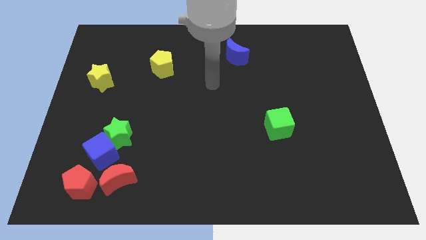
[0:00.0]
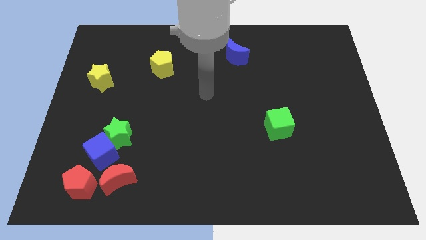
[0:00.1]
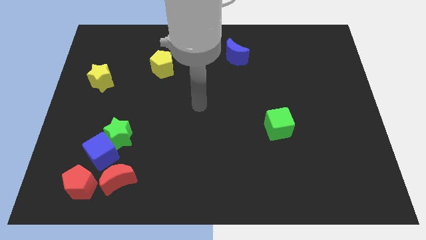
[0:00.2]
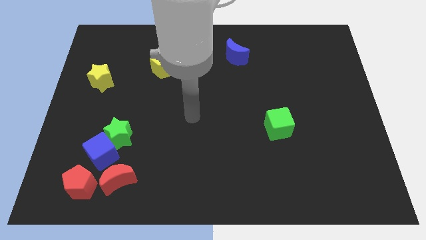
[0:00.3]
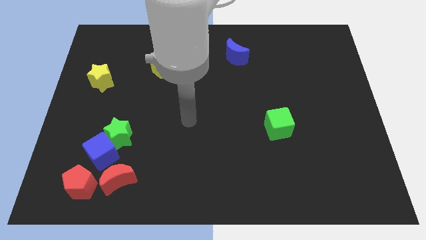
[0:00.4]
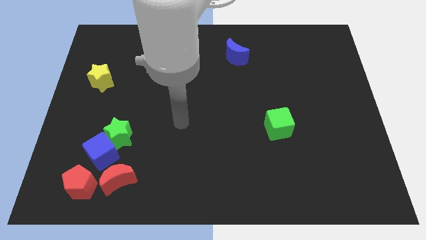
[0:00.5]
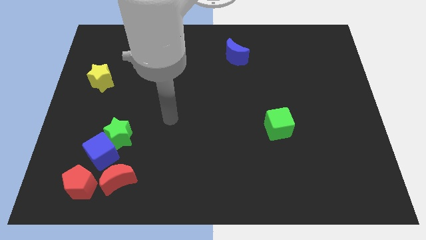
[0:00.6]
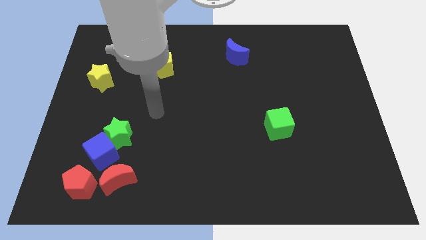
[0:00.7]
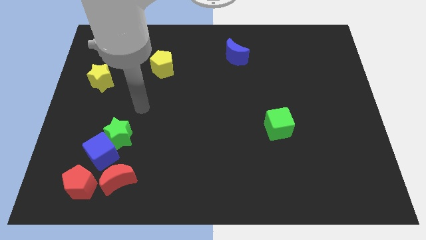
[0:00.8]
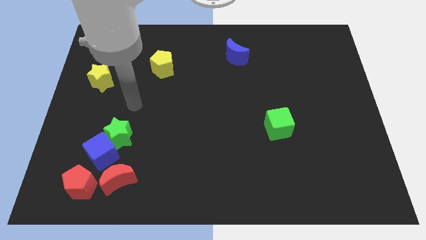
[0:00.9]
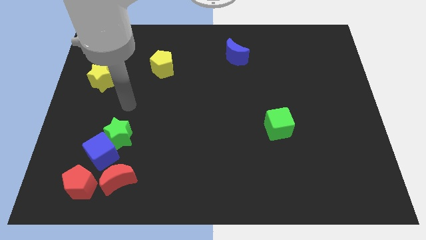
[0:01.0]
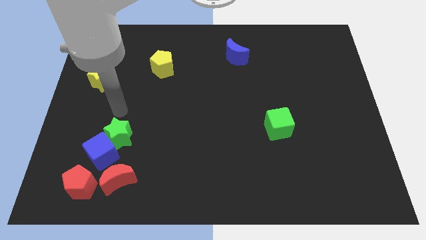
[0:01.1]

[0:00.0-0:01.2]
place your arm above the green star

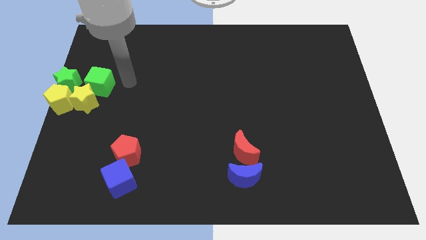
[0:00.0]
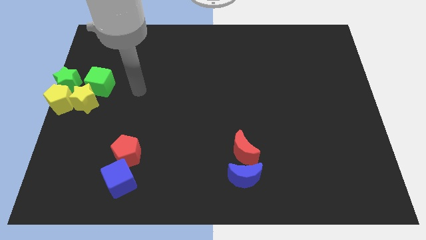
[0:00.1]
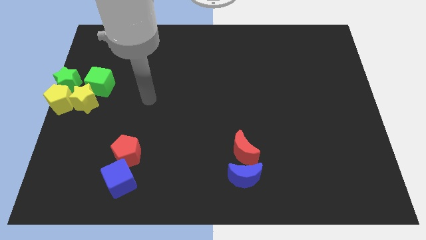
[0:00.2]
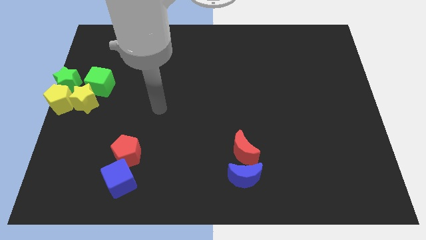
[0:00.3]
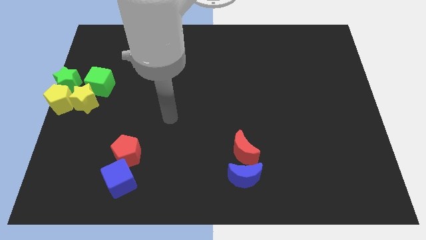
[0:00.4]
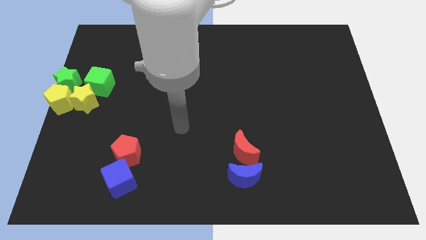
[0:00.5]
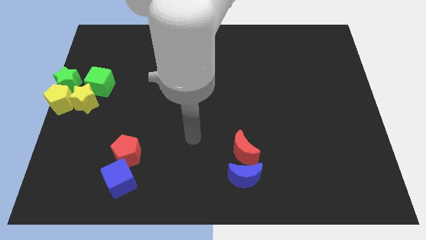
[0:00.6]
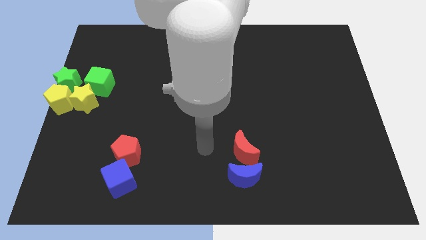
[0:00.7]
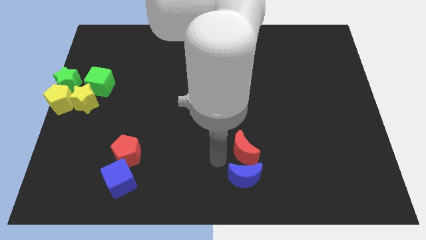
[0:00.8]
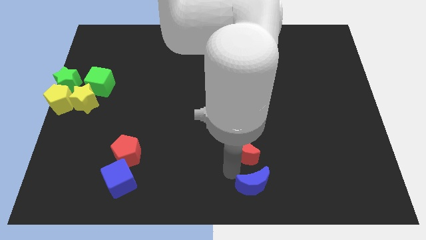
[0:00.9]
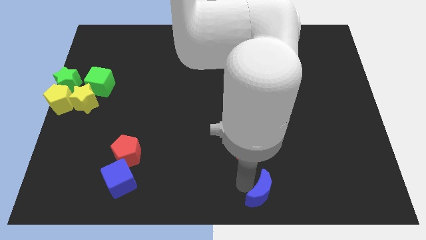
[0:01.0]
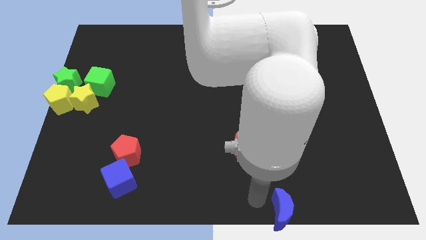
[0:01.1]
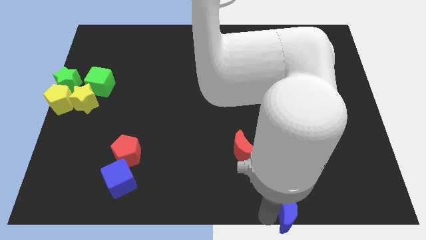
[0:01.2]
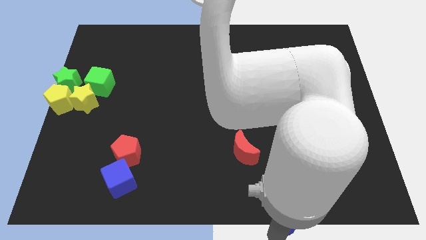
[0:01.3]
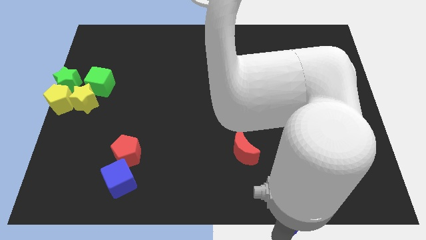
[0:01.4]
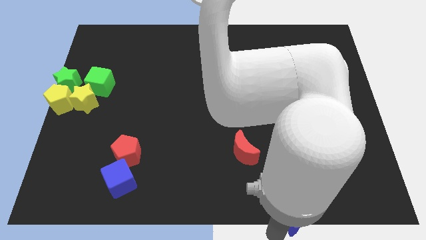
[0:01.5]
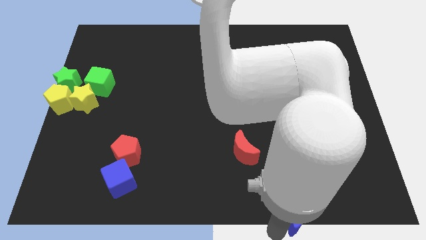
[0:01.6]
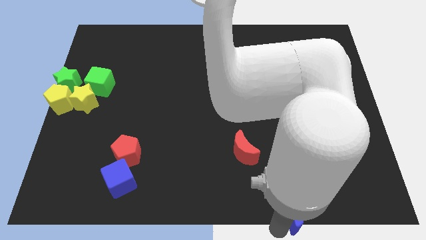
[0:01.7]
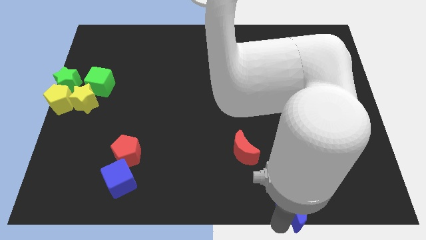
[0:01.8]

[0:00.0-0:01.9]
move arm near blue moon

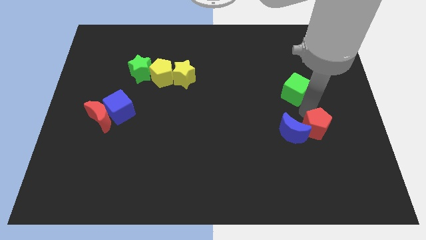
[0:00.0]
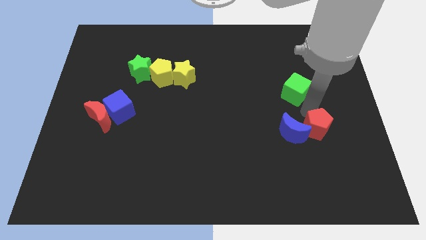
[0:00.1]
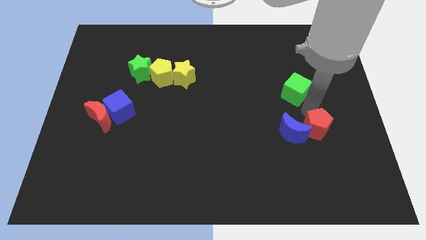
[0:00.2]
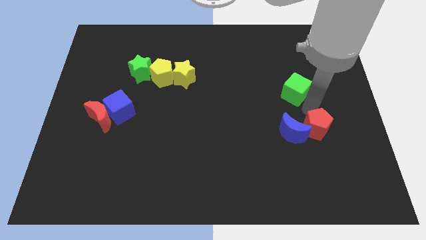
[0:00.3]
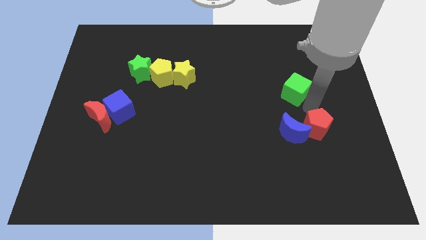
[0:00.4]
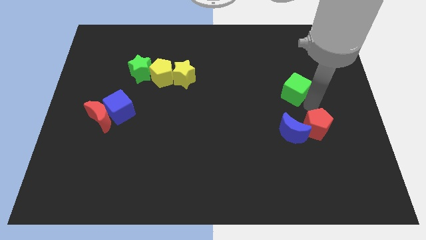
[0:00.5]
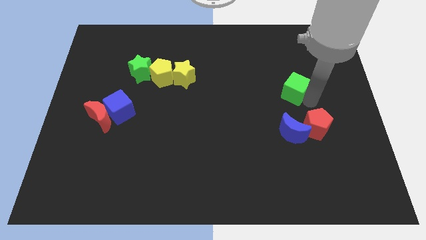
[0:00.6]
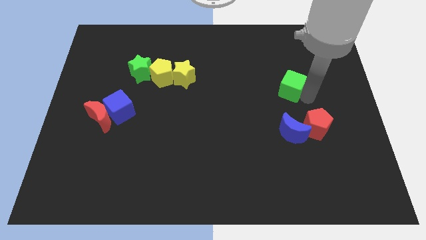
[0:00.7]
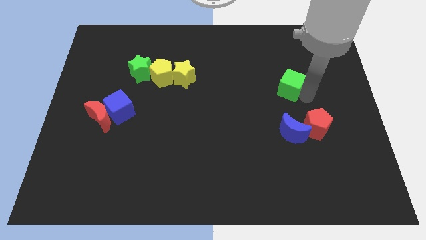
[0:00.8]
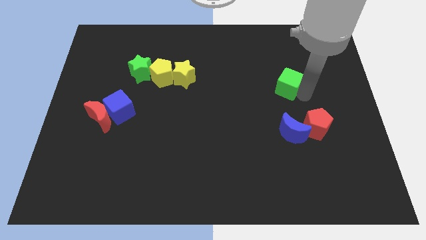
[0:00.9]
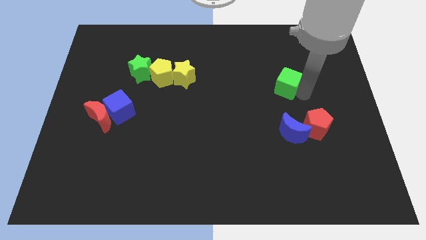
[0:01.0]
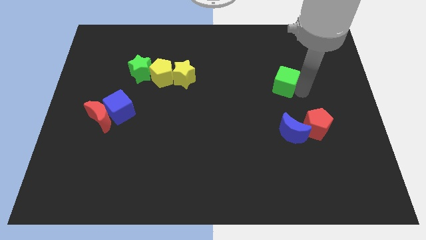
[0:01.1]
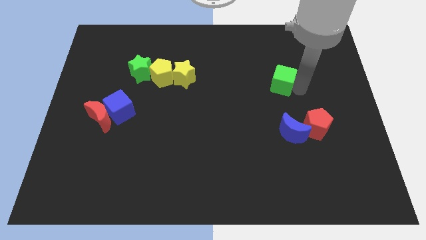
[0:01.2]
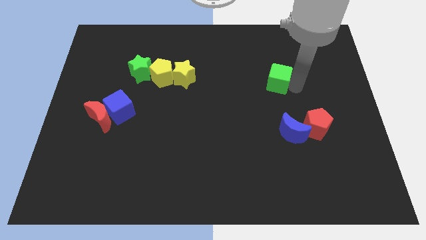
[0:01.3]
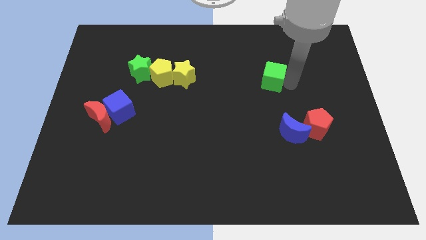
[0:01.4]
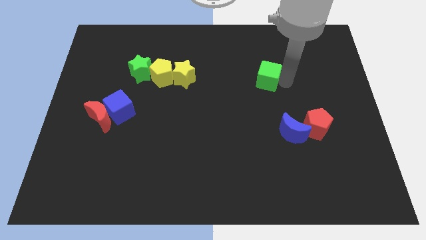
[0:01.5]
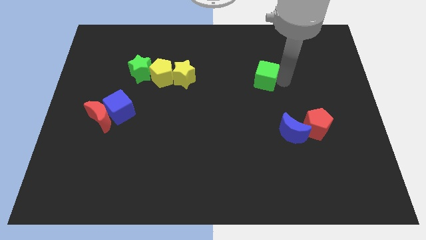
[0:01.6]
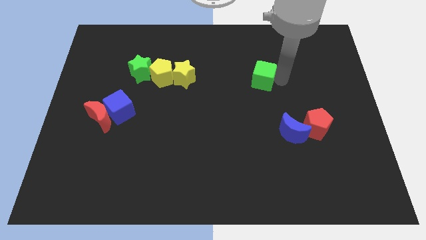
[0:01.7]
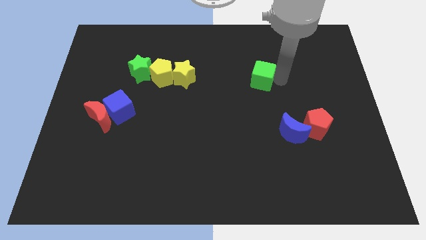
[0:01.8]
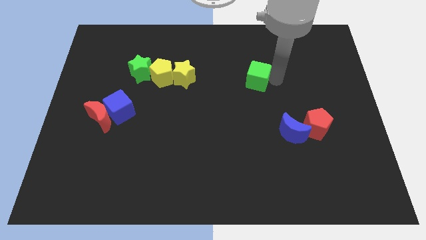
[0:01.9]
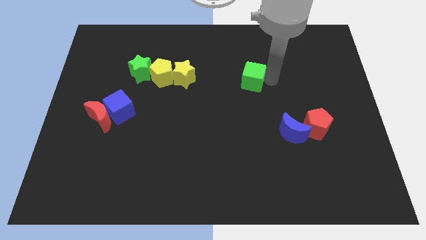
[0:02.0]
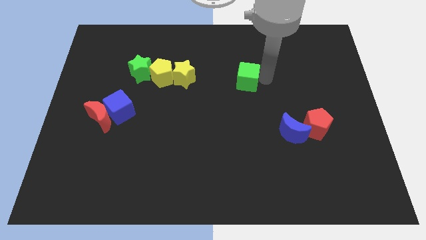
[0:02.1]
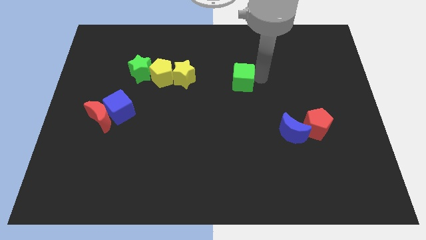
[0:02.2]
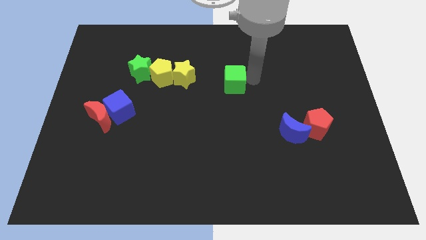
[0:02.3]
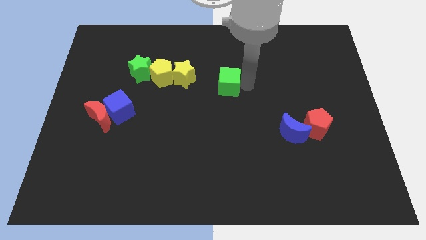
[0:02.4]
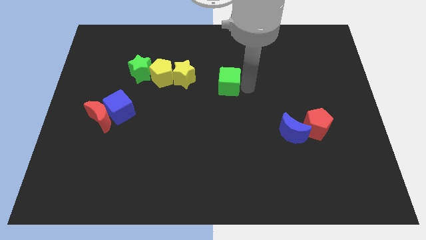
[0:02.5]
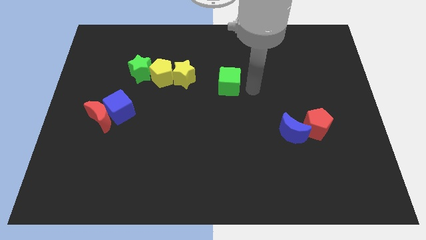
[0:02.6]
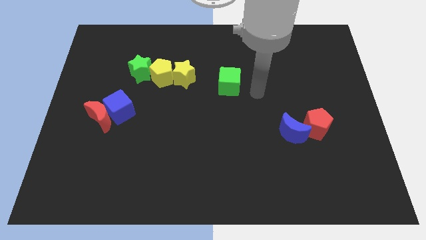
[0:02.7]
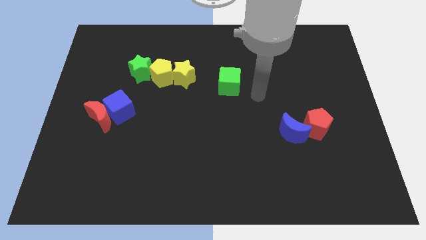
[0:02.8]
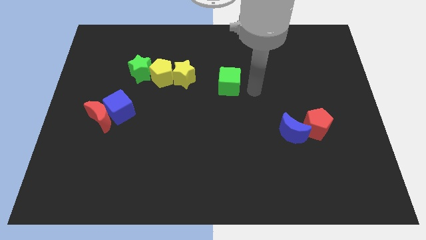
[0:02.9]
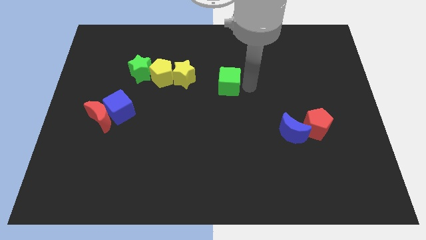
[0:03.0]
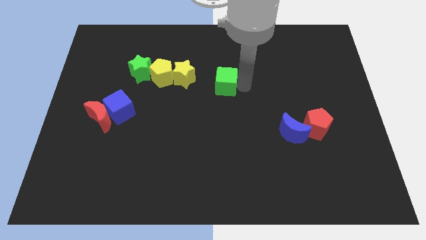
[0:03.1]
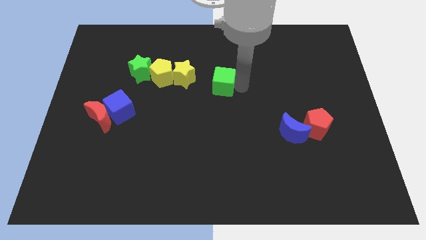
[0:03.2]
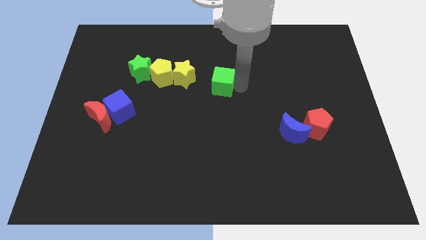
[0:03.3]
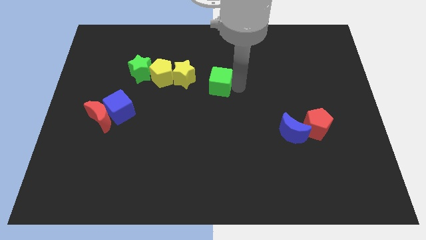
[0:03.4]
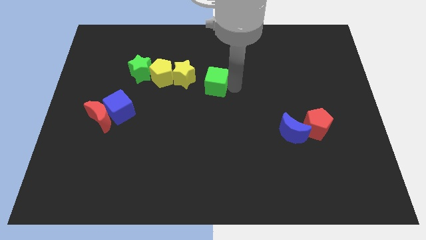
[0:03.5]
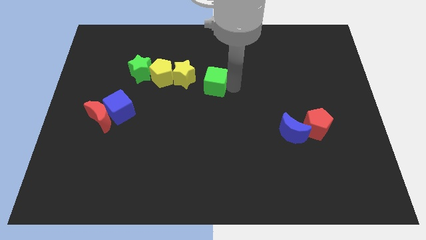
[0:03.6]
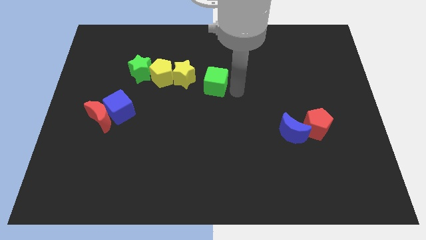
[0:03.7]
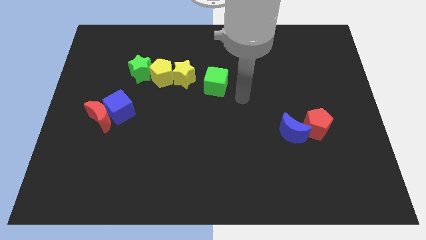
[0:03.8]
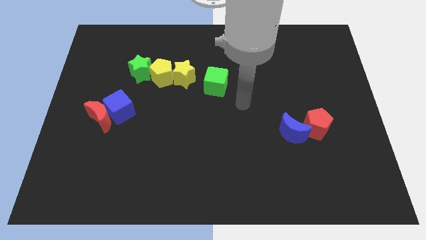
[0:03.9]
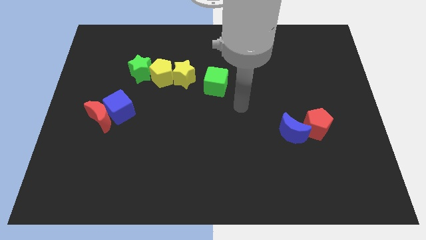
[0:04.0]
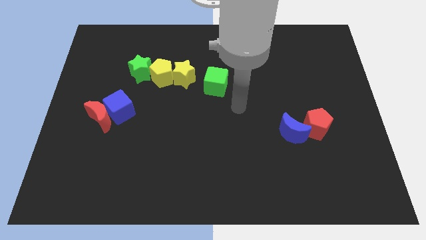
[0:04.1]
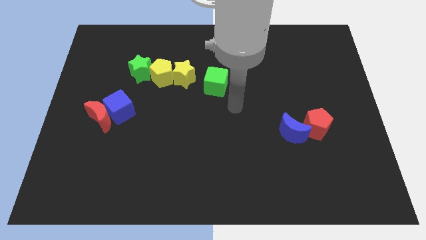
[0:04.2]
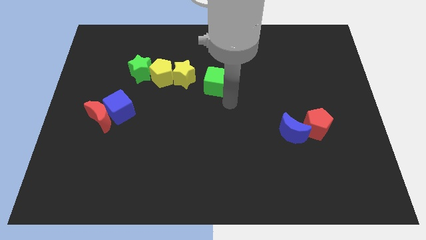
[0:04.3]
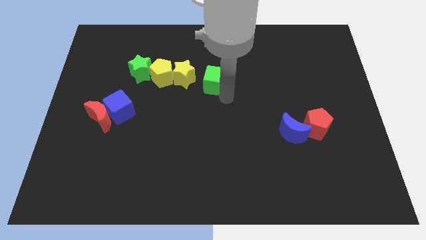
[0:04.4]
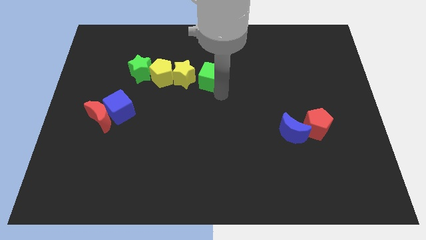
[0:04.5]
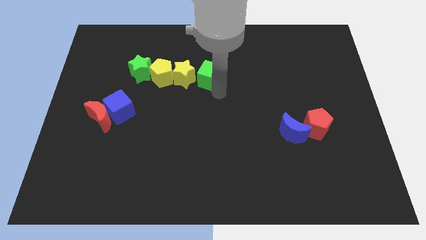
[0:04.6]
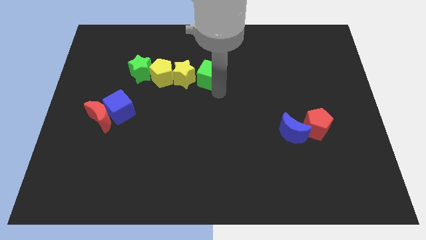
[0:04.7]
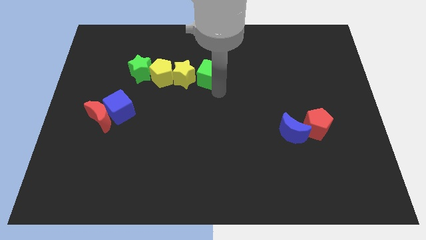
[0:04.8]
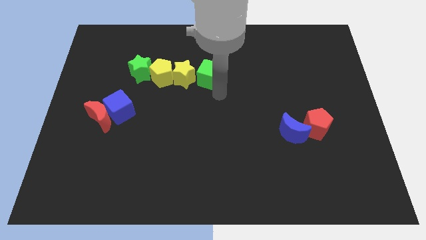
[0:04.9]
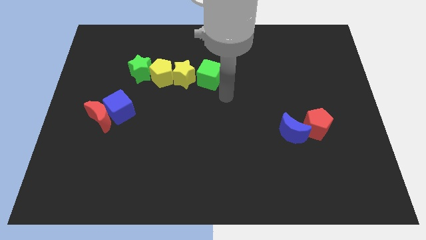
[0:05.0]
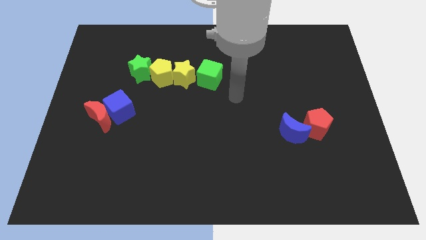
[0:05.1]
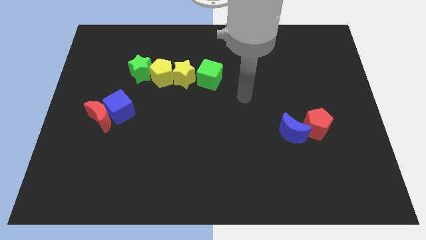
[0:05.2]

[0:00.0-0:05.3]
push the green cube to the right side of the yellow star

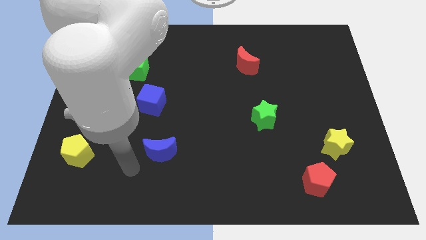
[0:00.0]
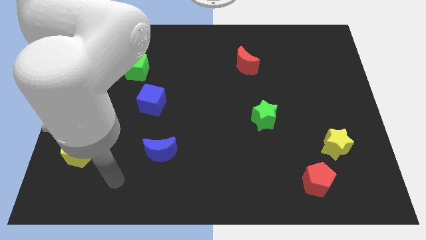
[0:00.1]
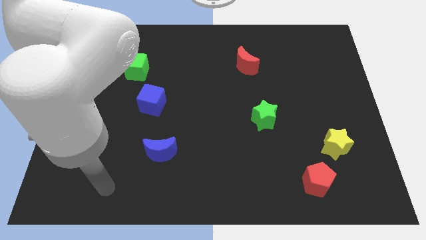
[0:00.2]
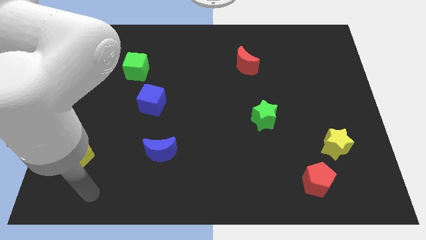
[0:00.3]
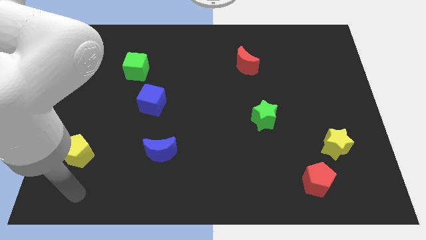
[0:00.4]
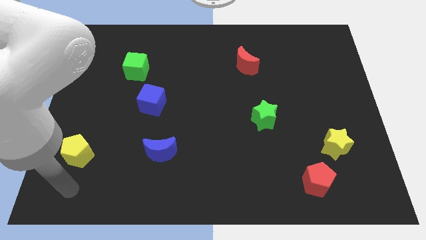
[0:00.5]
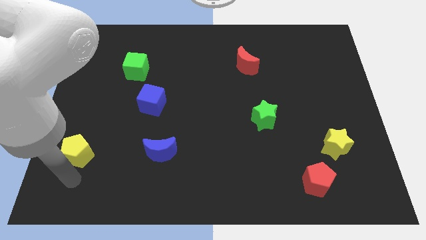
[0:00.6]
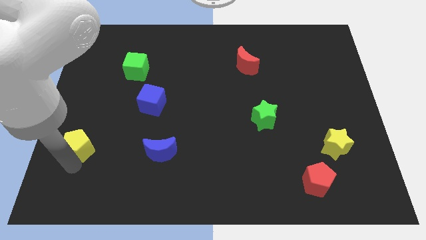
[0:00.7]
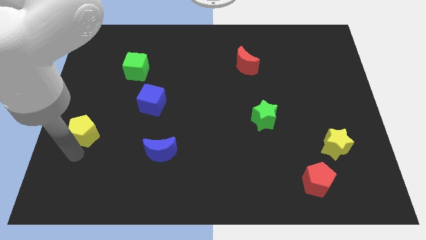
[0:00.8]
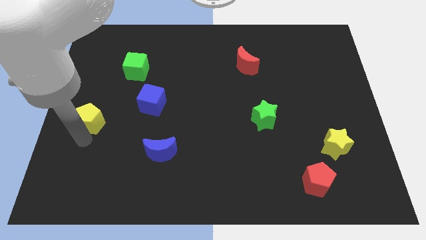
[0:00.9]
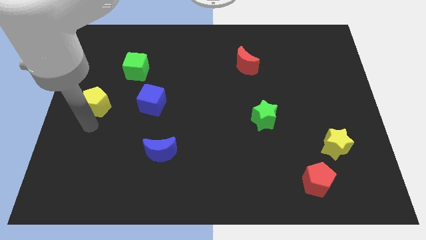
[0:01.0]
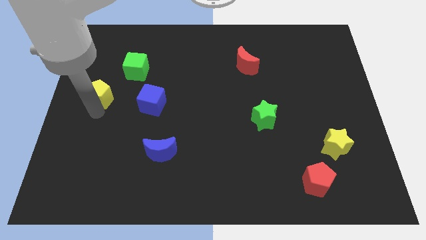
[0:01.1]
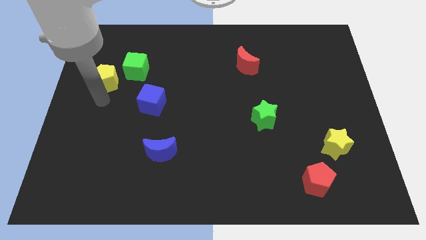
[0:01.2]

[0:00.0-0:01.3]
push the yellow pentagon towards green cube
